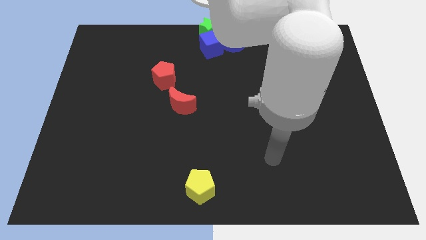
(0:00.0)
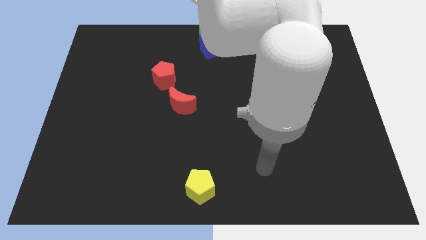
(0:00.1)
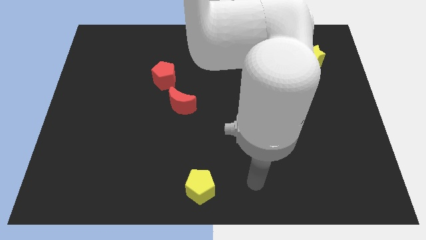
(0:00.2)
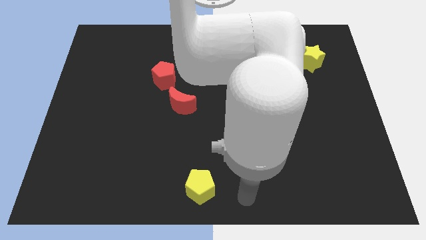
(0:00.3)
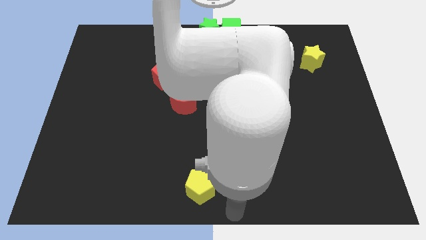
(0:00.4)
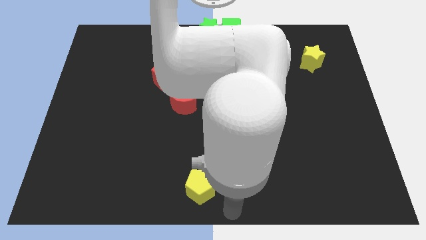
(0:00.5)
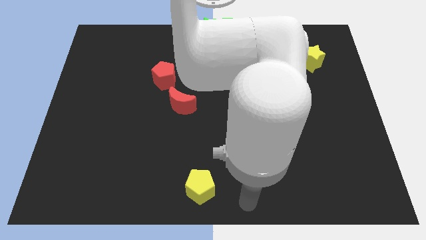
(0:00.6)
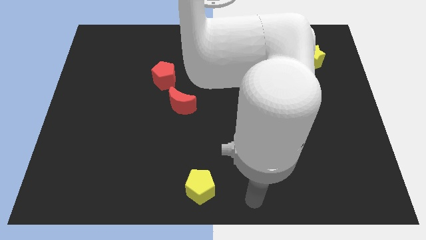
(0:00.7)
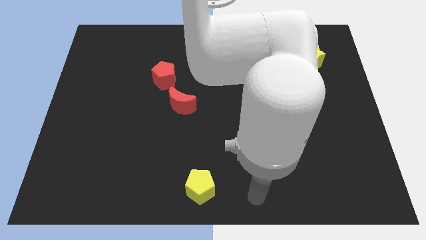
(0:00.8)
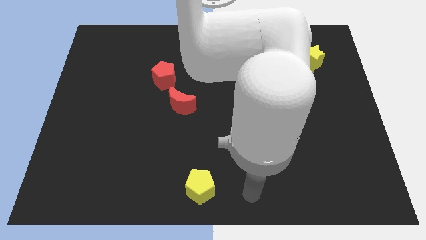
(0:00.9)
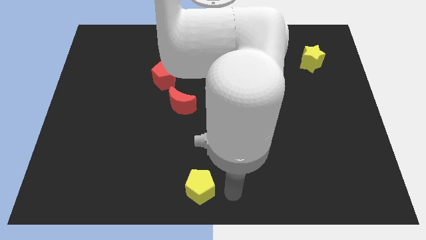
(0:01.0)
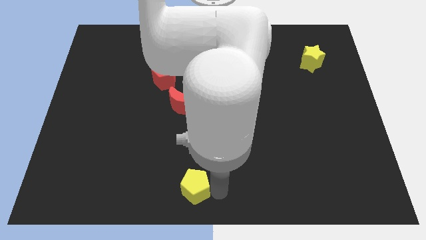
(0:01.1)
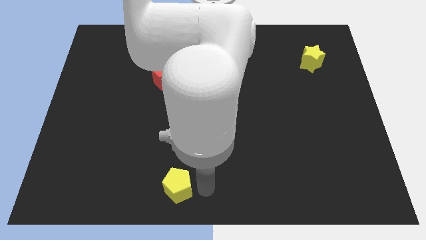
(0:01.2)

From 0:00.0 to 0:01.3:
move the yellow pentagon to the left bottom of the board

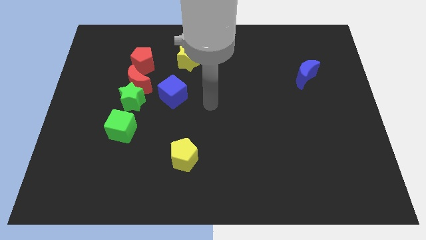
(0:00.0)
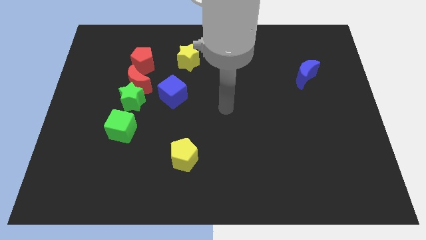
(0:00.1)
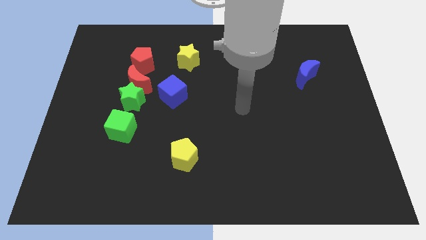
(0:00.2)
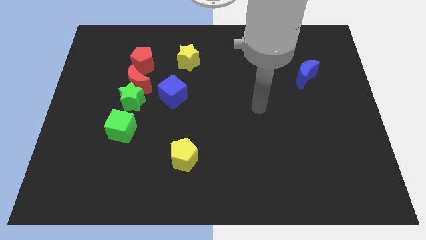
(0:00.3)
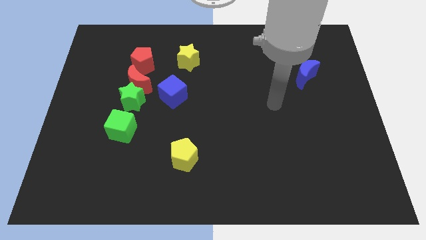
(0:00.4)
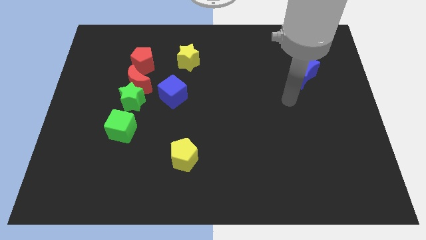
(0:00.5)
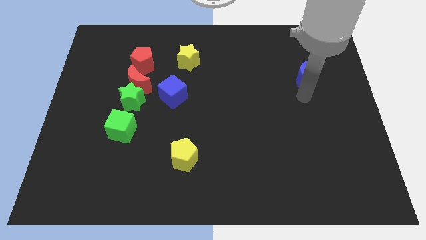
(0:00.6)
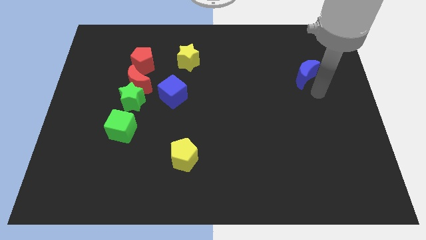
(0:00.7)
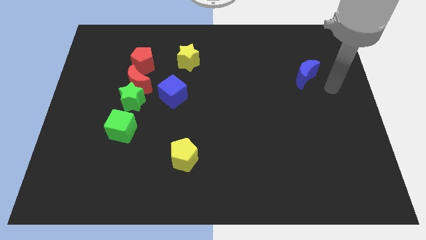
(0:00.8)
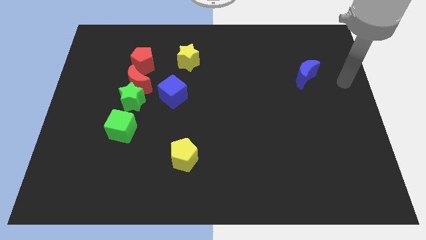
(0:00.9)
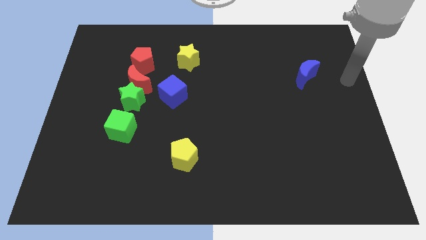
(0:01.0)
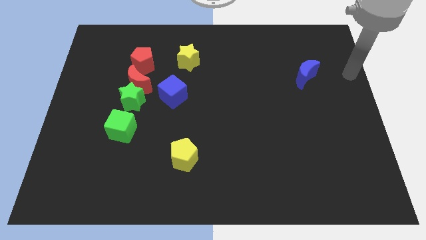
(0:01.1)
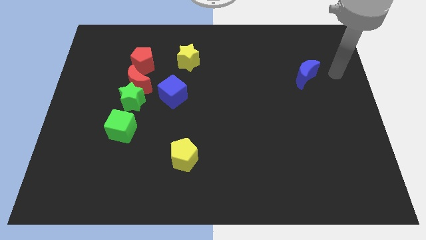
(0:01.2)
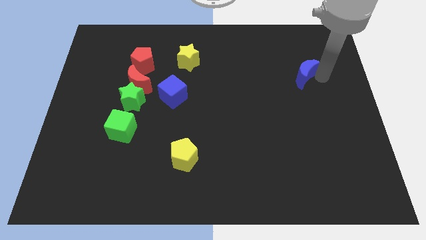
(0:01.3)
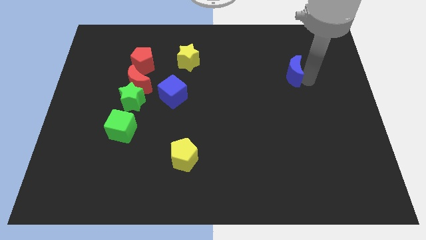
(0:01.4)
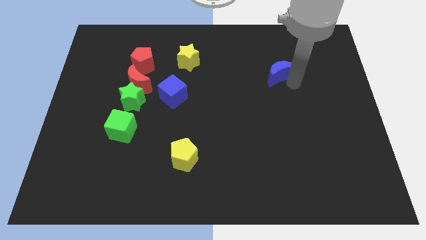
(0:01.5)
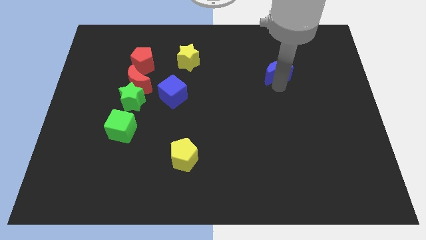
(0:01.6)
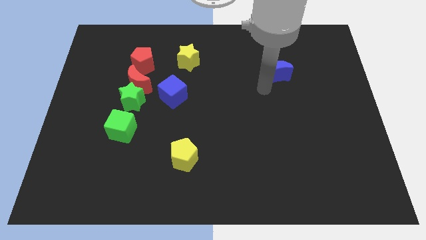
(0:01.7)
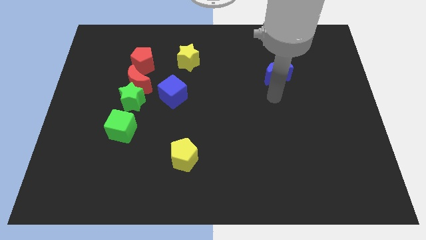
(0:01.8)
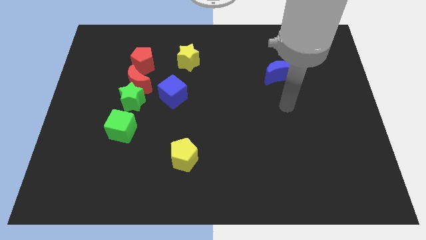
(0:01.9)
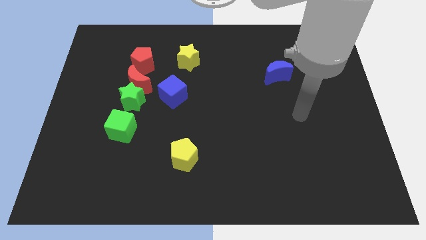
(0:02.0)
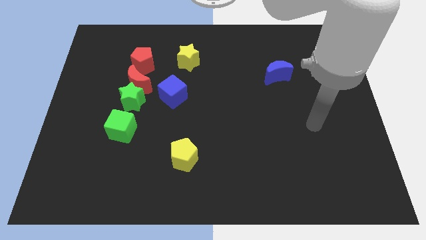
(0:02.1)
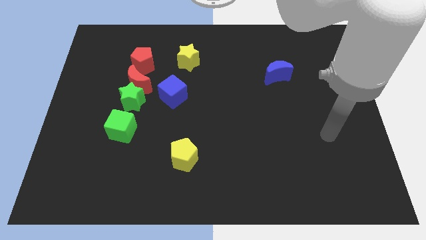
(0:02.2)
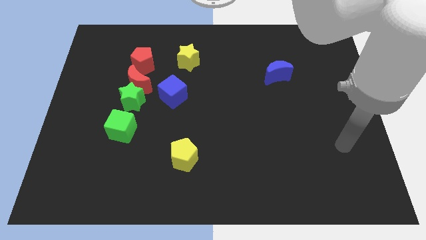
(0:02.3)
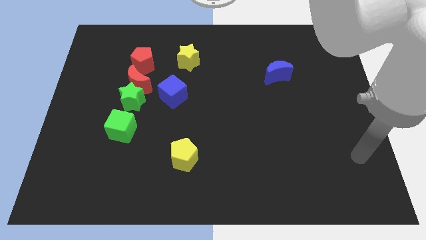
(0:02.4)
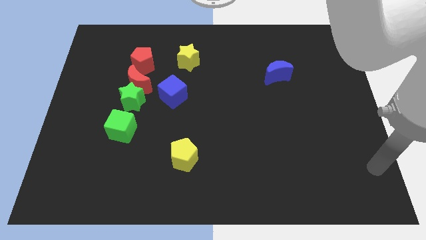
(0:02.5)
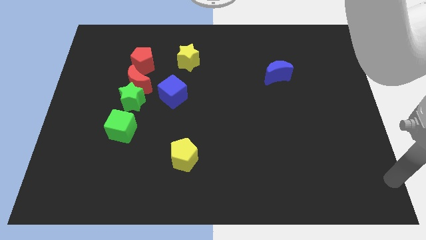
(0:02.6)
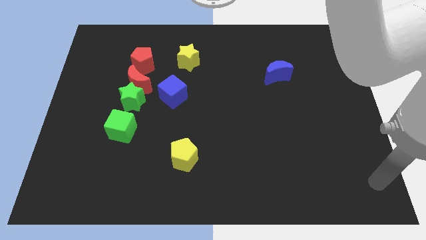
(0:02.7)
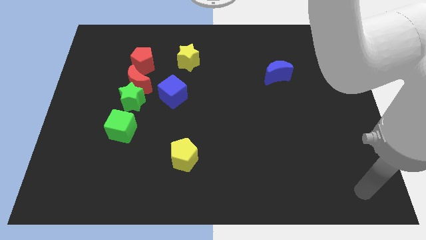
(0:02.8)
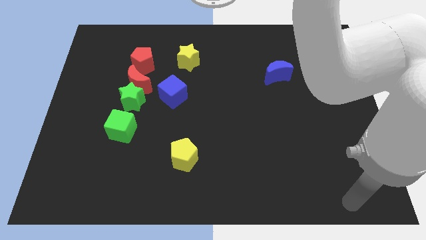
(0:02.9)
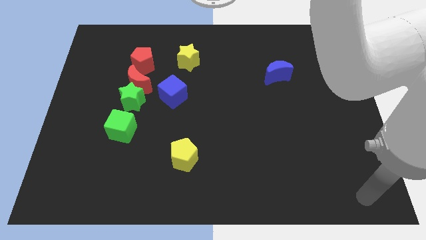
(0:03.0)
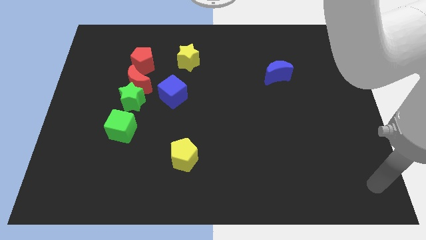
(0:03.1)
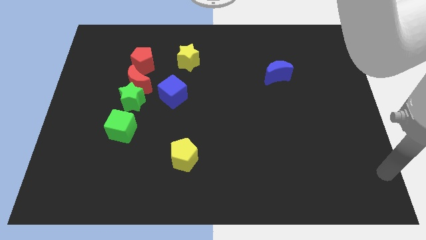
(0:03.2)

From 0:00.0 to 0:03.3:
push the blue crescent slightly to the left side of the board

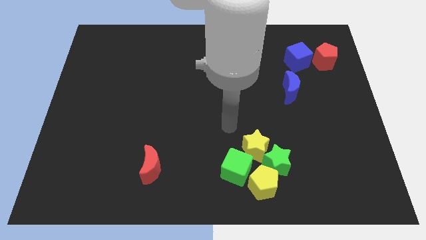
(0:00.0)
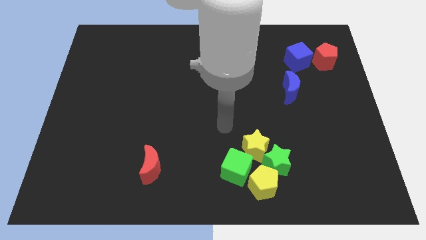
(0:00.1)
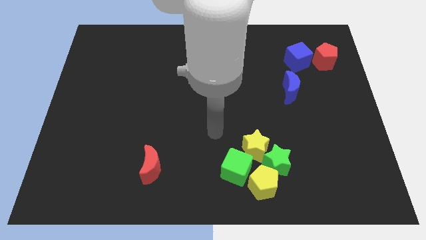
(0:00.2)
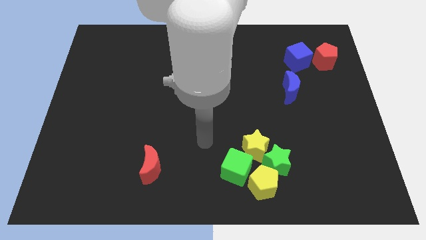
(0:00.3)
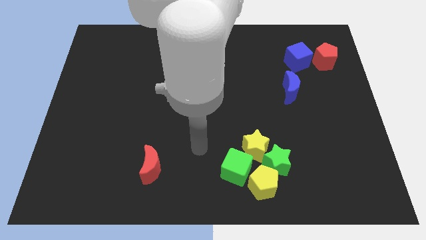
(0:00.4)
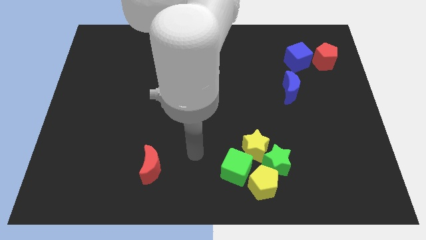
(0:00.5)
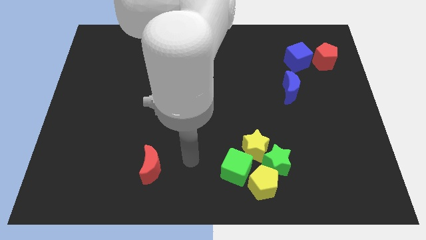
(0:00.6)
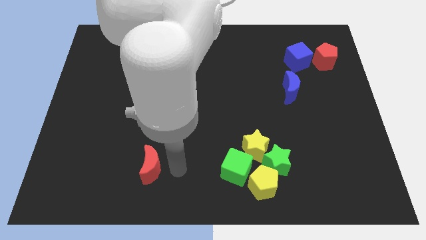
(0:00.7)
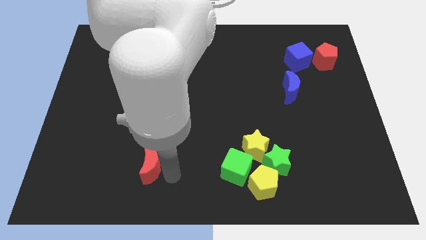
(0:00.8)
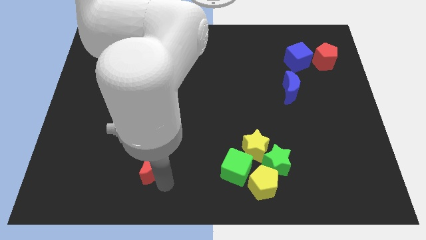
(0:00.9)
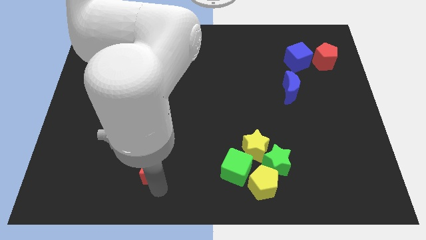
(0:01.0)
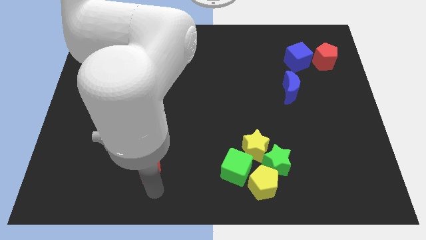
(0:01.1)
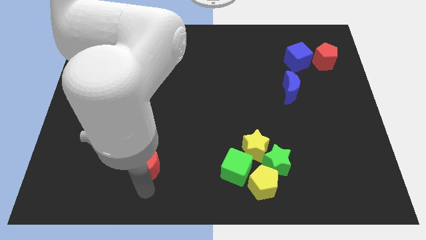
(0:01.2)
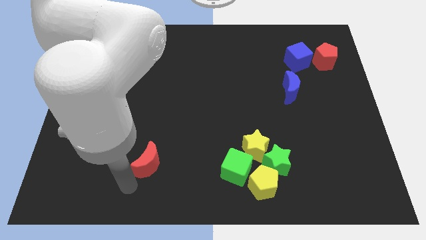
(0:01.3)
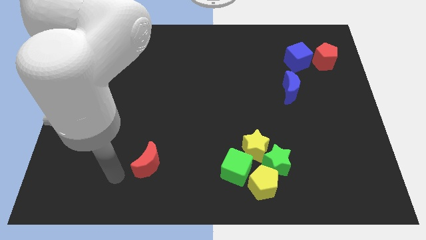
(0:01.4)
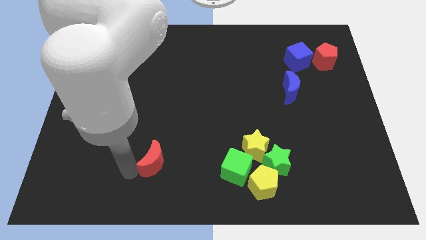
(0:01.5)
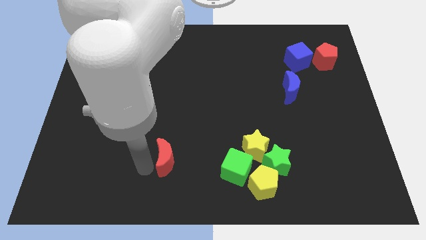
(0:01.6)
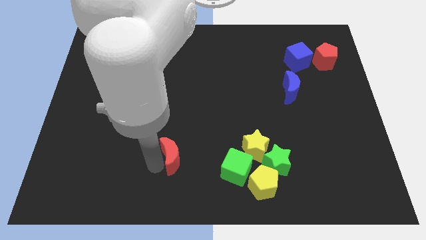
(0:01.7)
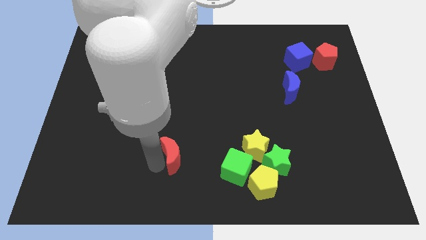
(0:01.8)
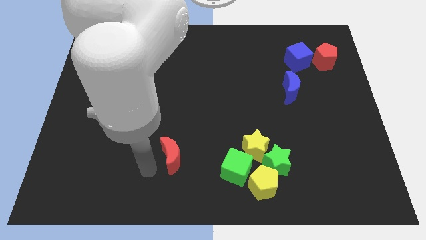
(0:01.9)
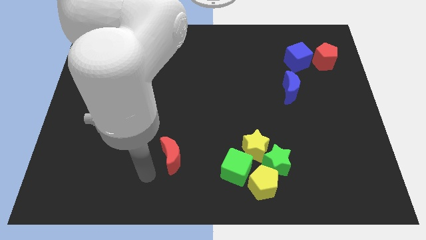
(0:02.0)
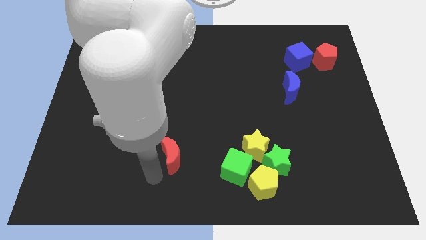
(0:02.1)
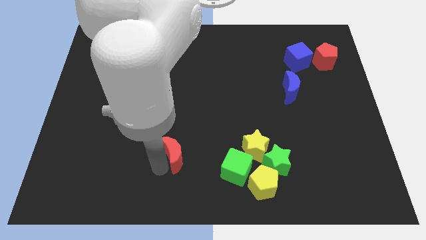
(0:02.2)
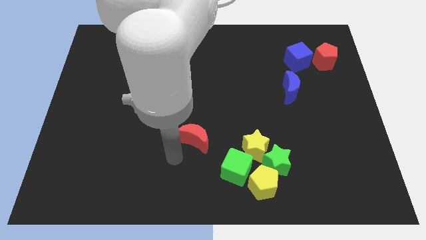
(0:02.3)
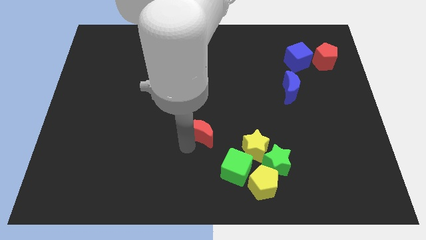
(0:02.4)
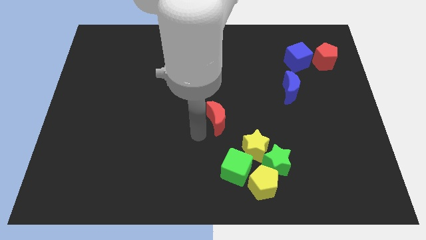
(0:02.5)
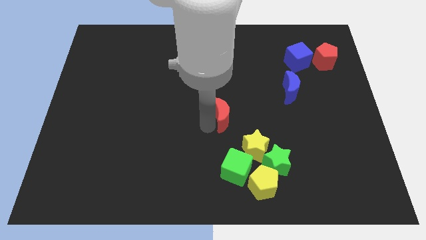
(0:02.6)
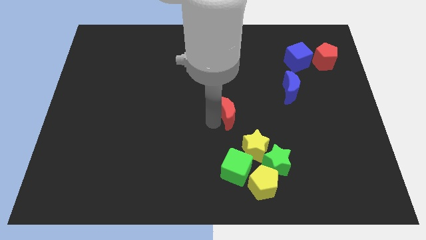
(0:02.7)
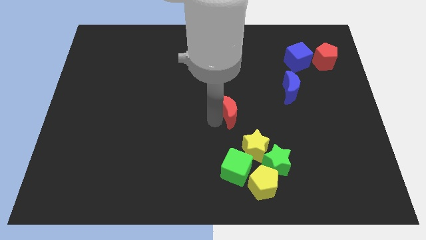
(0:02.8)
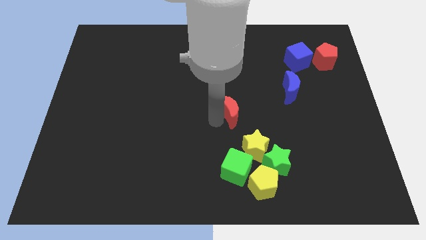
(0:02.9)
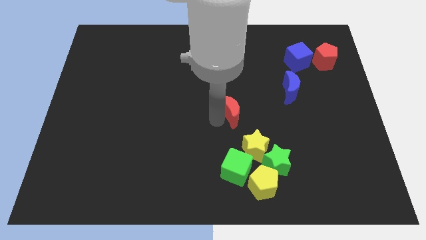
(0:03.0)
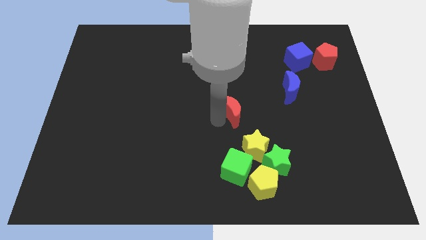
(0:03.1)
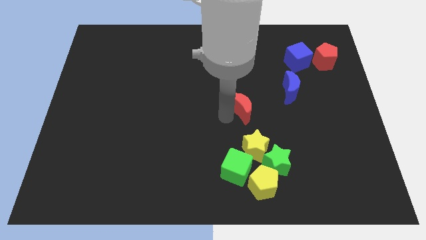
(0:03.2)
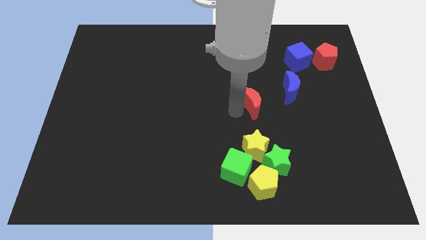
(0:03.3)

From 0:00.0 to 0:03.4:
move red moon to the blue moon

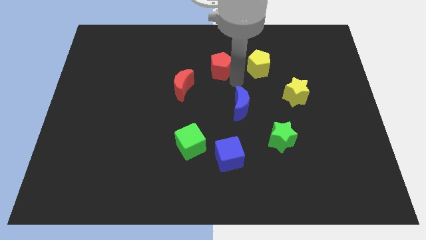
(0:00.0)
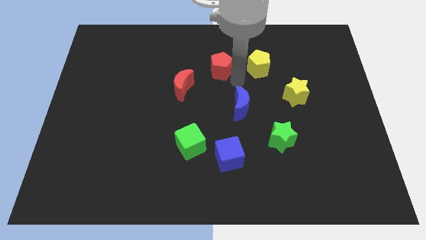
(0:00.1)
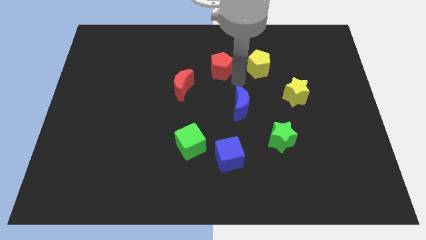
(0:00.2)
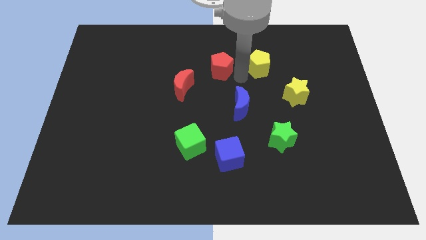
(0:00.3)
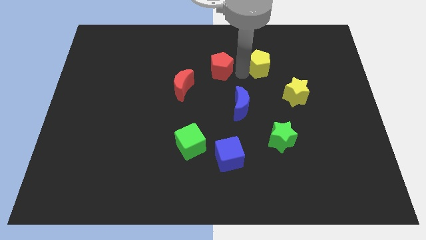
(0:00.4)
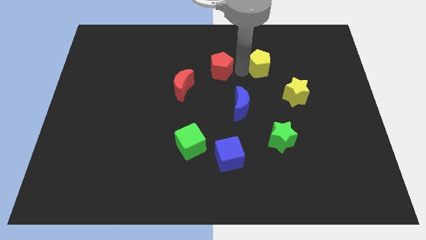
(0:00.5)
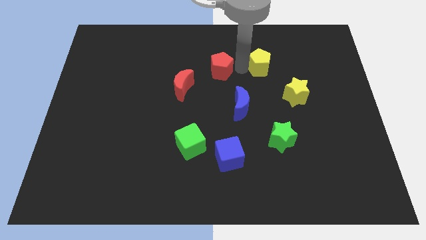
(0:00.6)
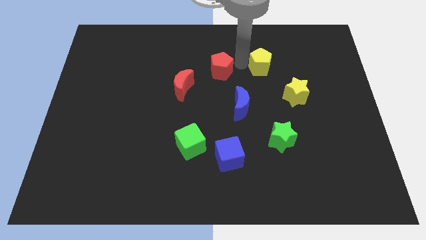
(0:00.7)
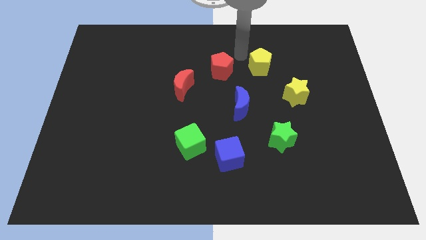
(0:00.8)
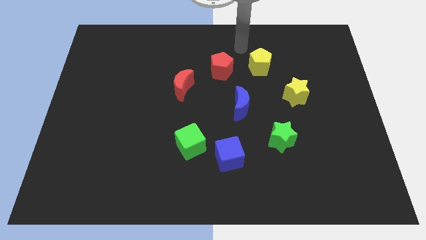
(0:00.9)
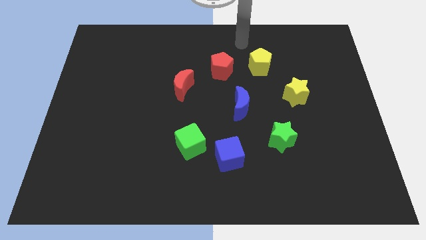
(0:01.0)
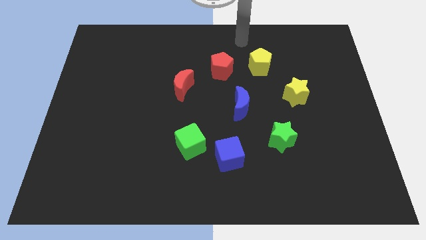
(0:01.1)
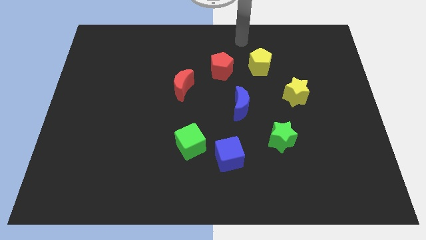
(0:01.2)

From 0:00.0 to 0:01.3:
move the arm to the top center of the board
